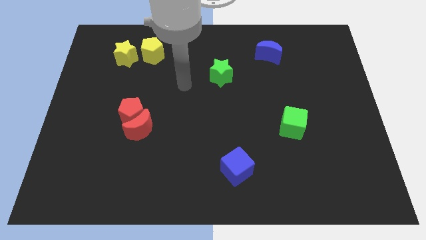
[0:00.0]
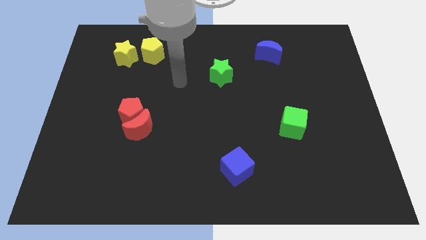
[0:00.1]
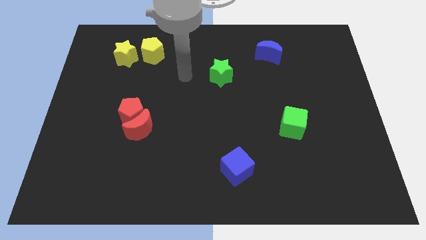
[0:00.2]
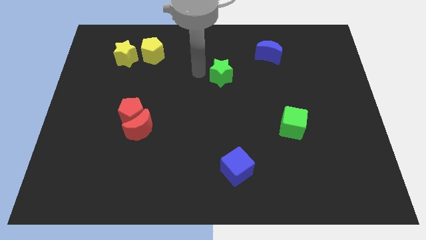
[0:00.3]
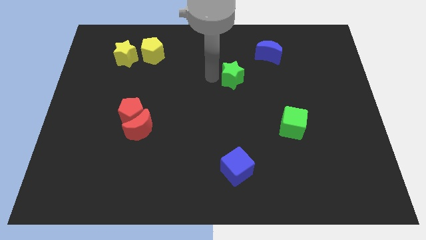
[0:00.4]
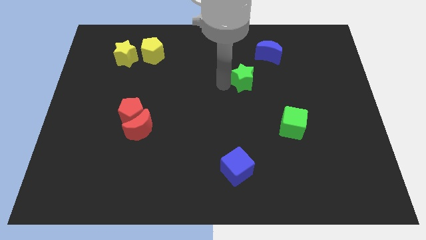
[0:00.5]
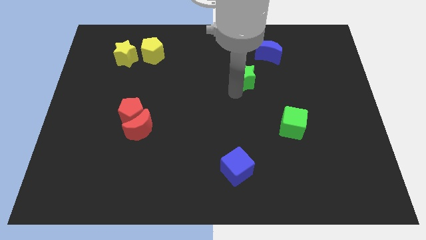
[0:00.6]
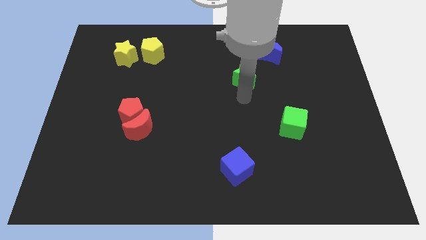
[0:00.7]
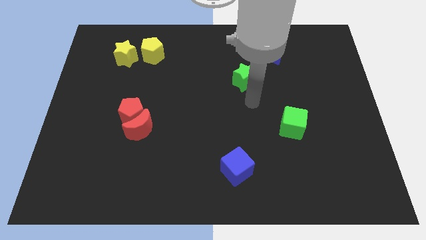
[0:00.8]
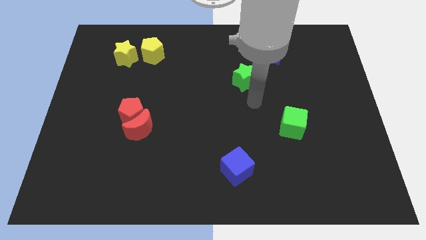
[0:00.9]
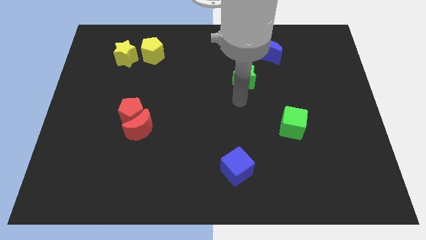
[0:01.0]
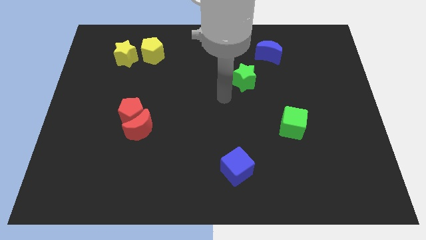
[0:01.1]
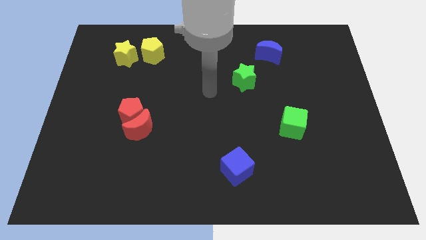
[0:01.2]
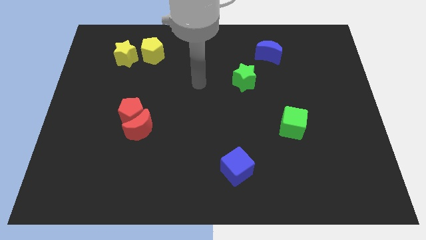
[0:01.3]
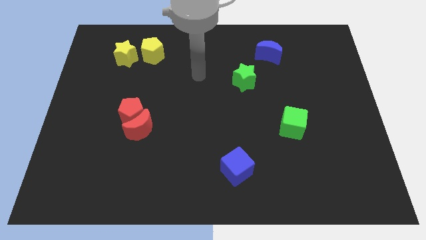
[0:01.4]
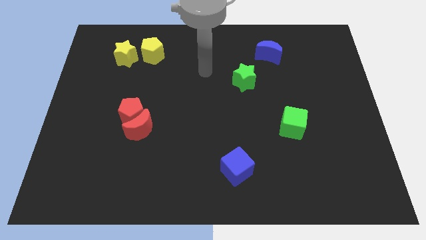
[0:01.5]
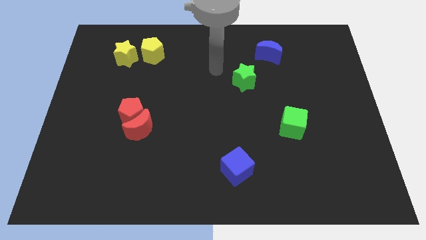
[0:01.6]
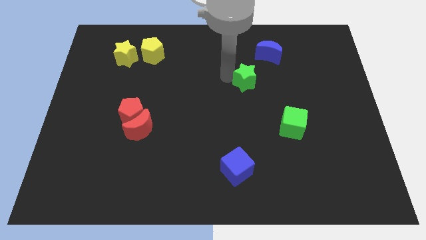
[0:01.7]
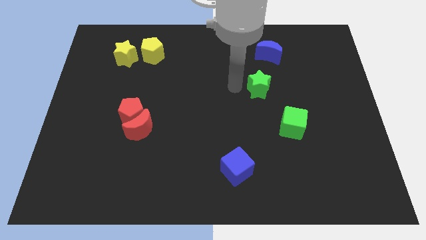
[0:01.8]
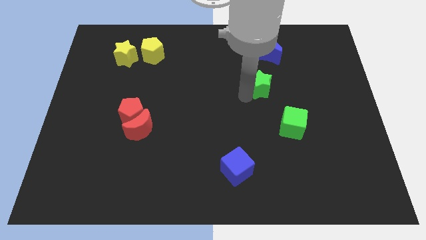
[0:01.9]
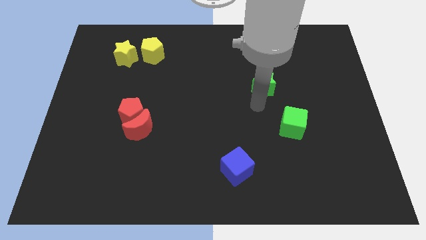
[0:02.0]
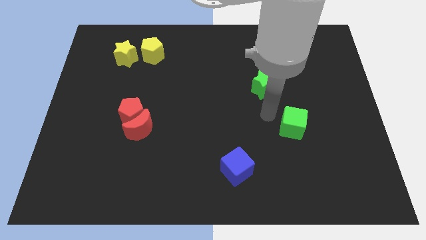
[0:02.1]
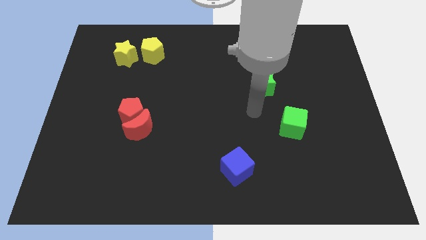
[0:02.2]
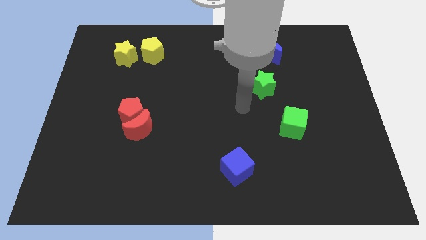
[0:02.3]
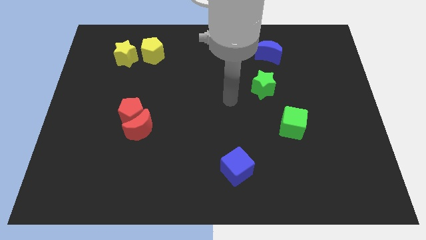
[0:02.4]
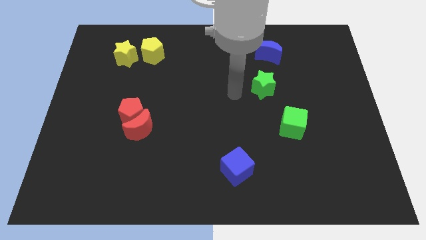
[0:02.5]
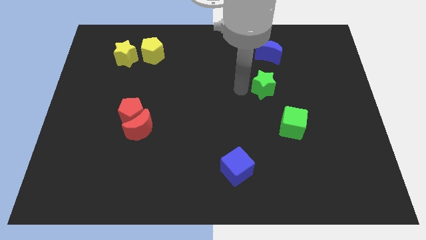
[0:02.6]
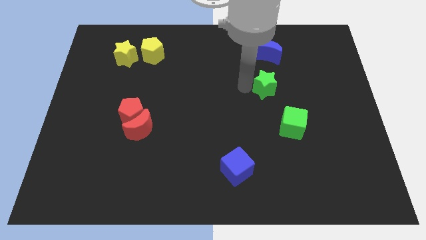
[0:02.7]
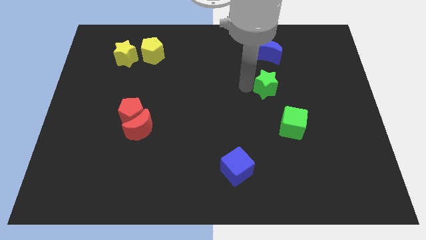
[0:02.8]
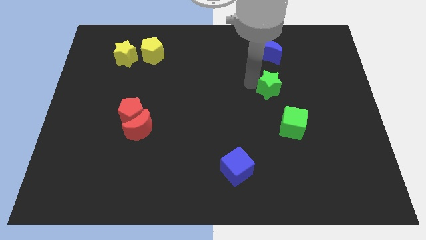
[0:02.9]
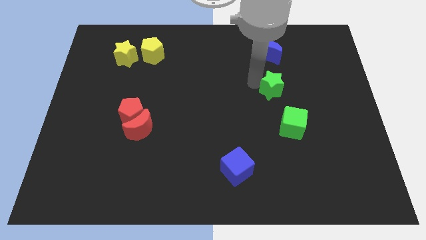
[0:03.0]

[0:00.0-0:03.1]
place the green star in between blue moon and green cube

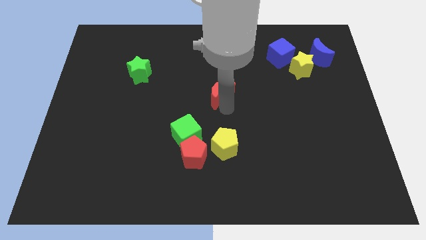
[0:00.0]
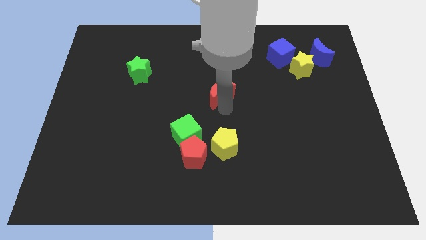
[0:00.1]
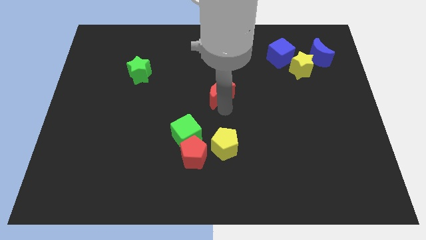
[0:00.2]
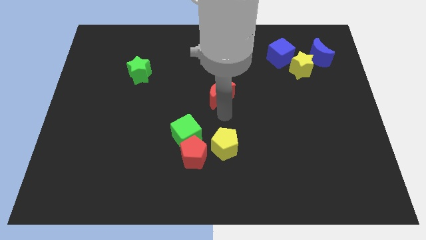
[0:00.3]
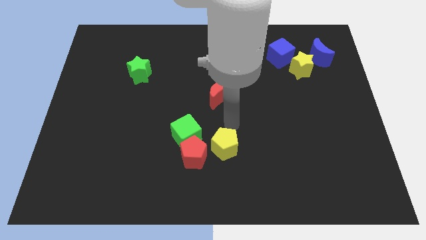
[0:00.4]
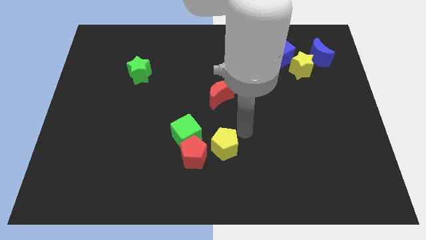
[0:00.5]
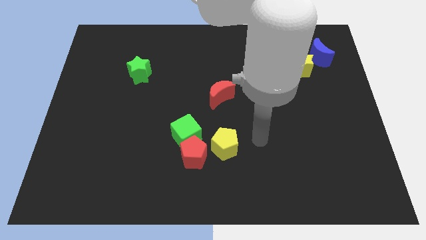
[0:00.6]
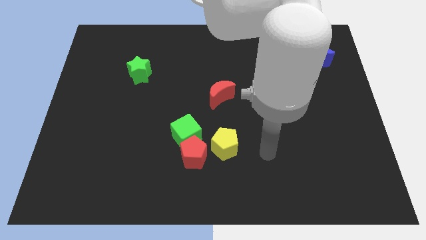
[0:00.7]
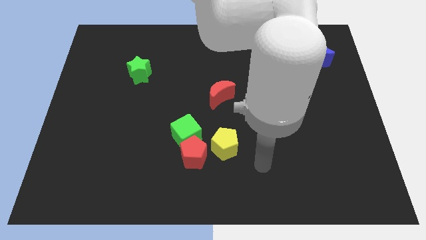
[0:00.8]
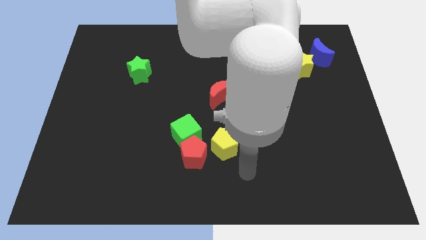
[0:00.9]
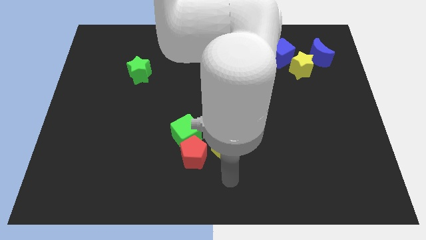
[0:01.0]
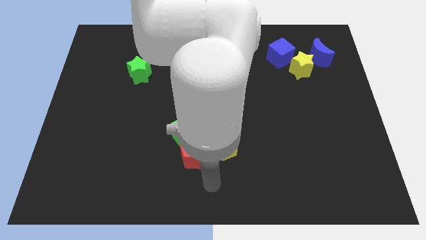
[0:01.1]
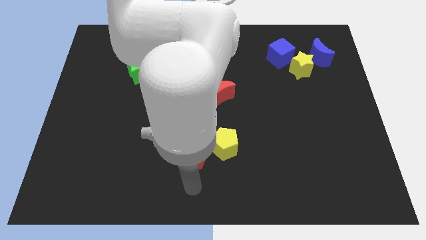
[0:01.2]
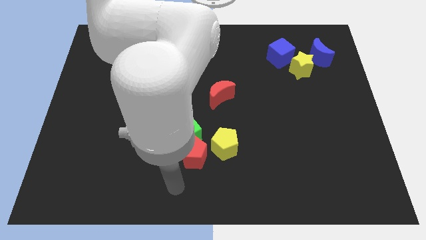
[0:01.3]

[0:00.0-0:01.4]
move your arm towards the red pentagon

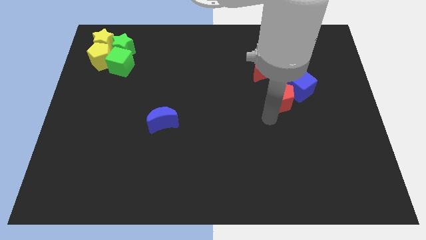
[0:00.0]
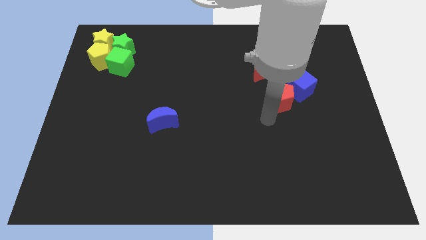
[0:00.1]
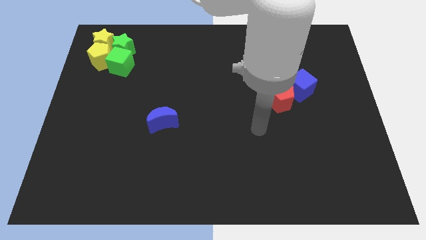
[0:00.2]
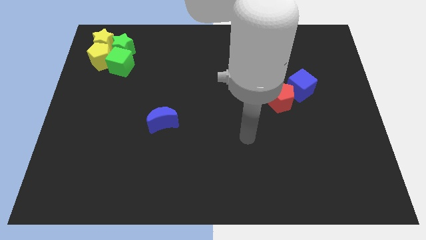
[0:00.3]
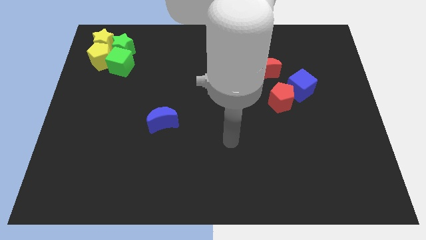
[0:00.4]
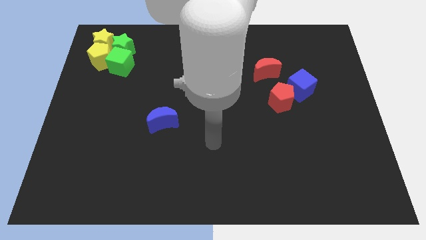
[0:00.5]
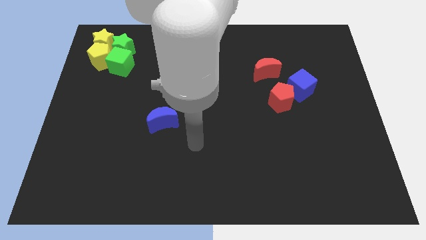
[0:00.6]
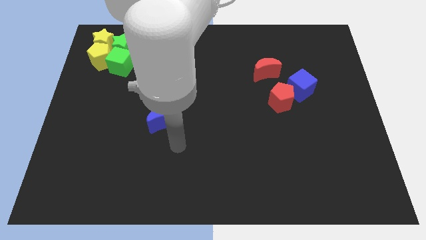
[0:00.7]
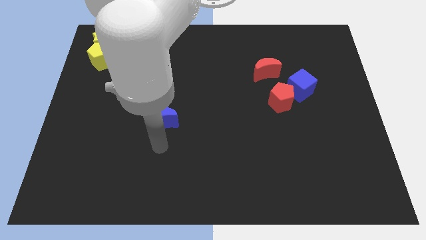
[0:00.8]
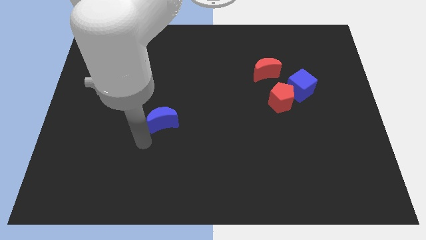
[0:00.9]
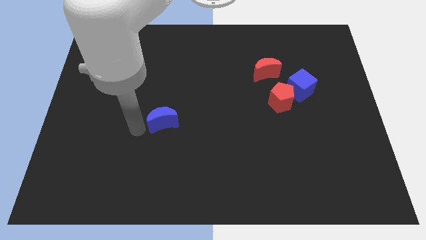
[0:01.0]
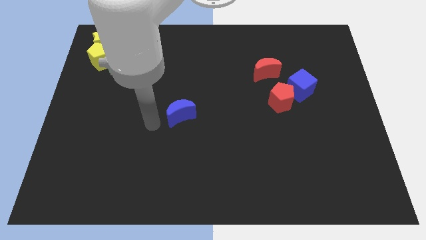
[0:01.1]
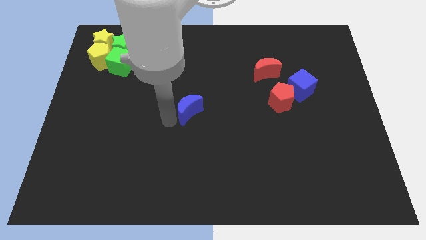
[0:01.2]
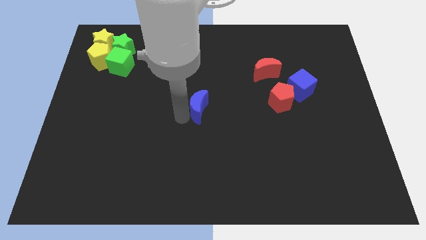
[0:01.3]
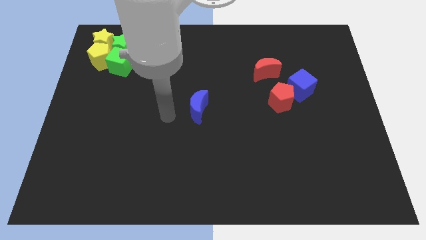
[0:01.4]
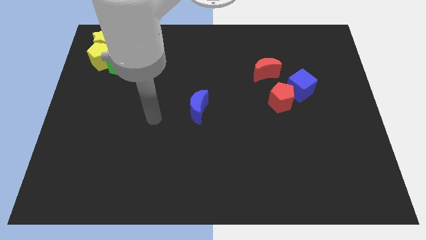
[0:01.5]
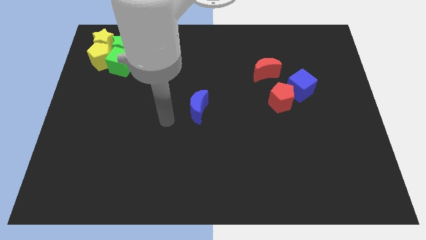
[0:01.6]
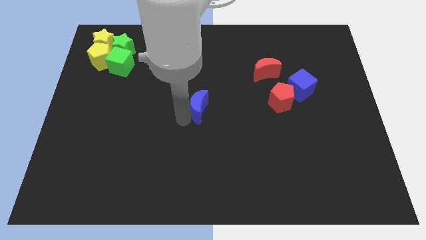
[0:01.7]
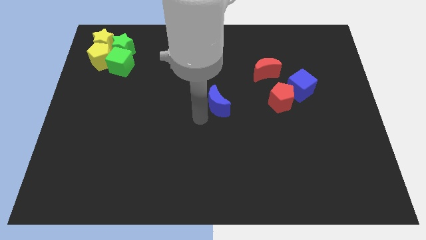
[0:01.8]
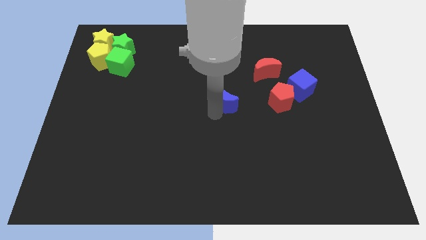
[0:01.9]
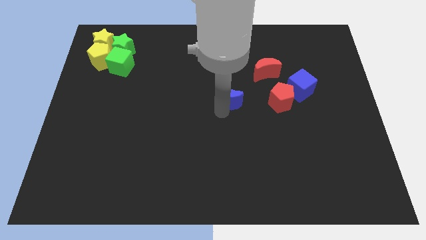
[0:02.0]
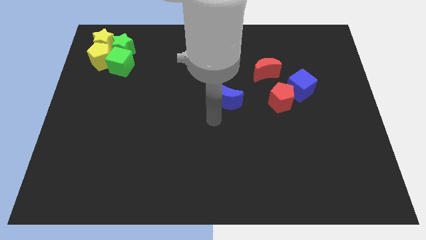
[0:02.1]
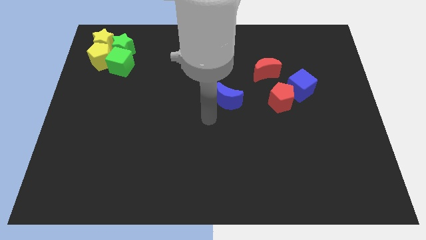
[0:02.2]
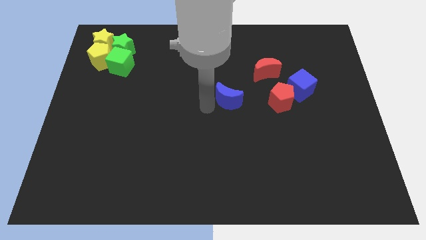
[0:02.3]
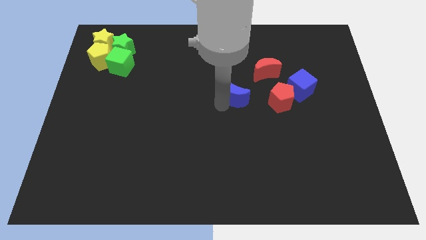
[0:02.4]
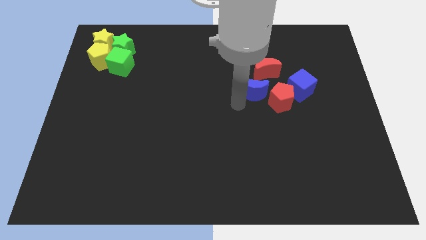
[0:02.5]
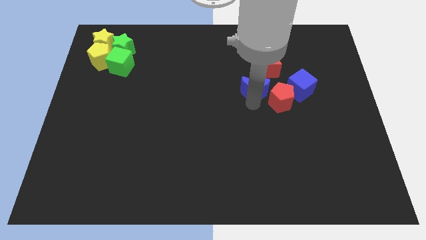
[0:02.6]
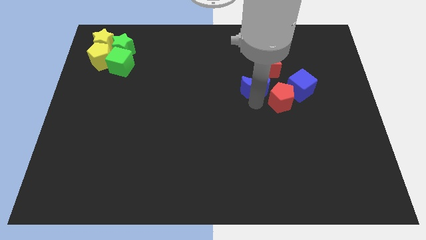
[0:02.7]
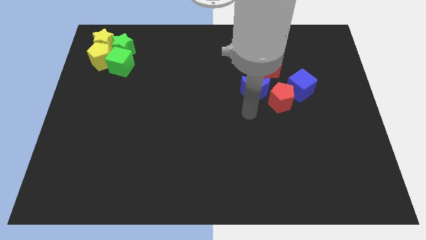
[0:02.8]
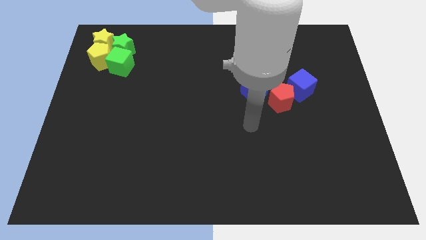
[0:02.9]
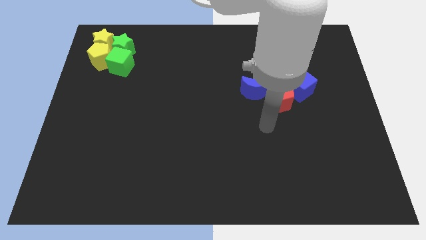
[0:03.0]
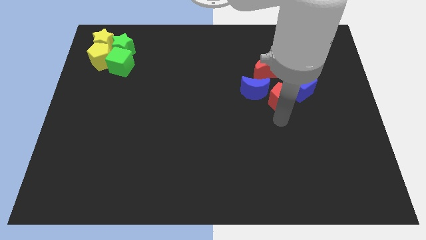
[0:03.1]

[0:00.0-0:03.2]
push the blue crescent to the bottom left of the red crescent

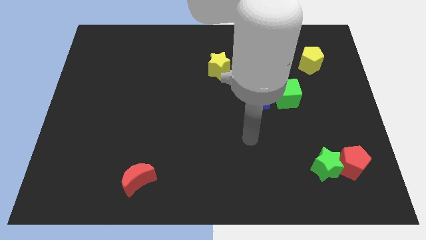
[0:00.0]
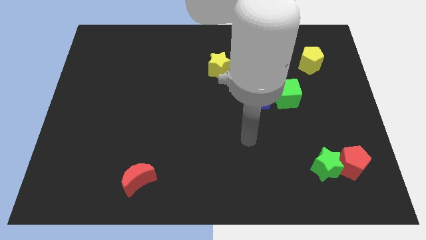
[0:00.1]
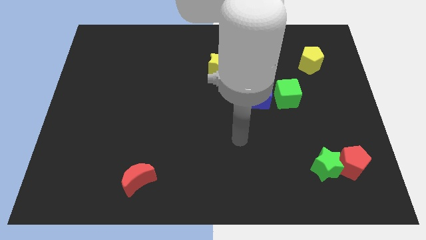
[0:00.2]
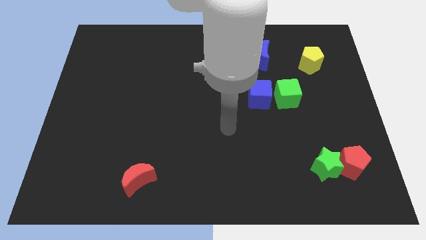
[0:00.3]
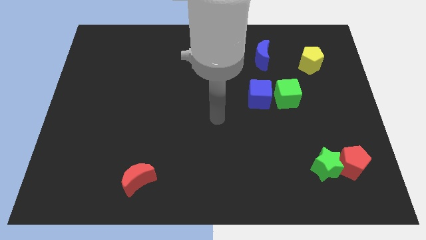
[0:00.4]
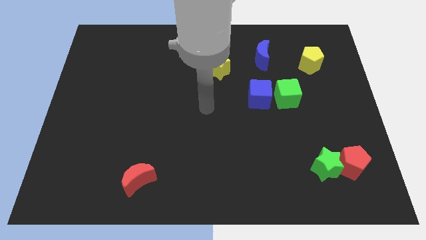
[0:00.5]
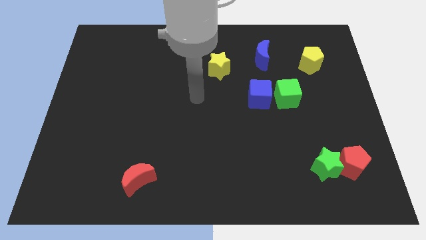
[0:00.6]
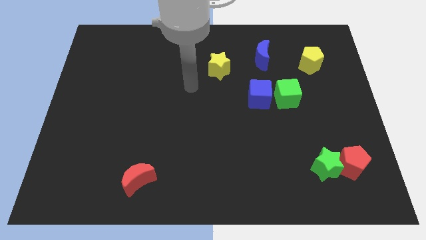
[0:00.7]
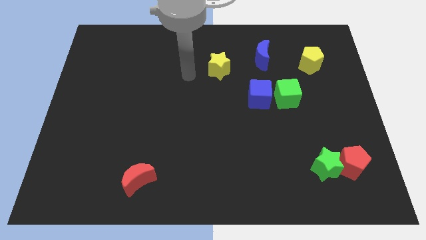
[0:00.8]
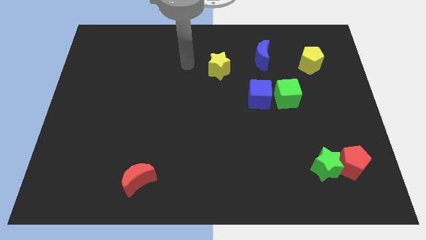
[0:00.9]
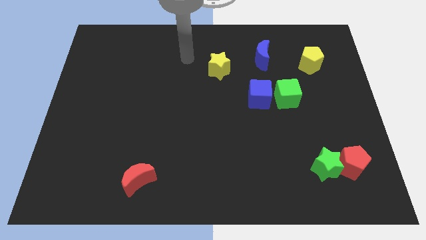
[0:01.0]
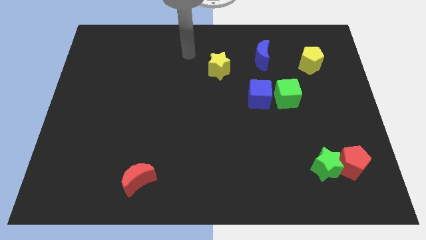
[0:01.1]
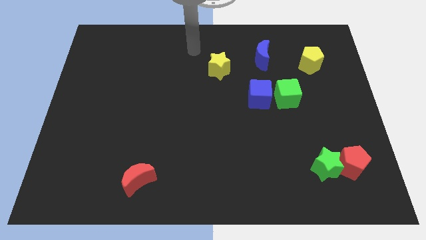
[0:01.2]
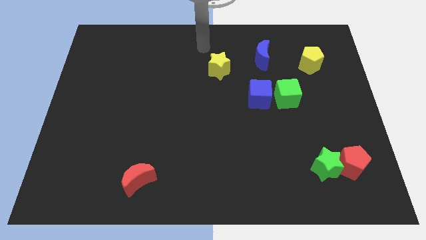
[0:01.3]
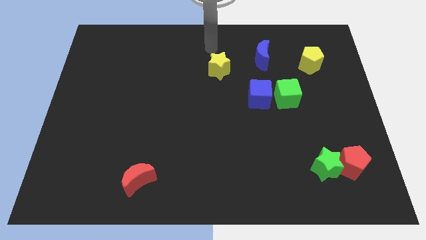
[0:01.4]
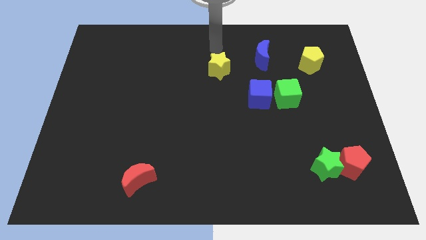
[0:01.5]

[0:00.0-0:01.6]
move the arm towards the top side of the yellow star
